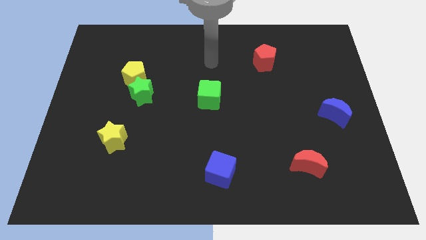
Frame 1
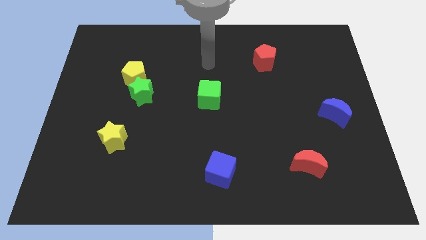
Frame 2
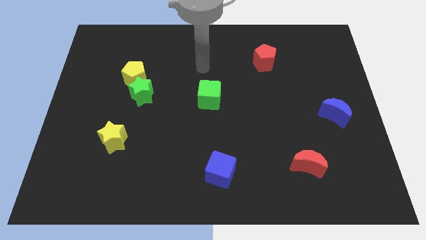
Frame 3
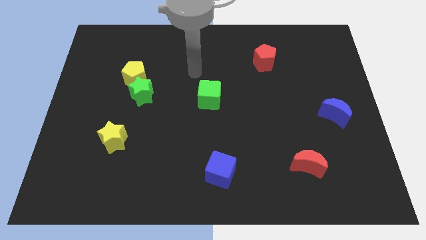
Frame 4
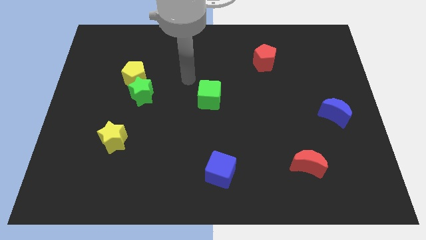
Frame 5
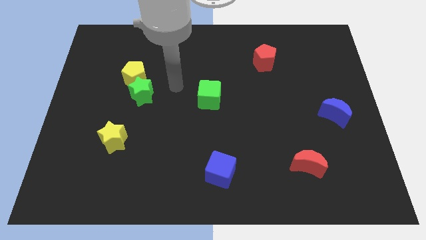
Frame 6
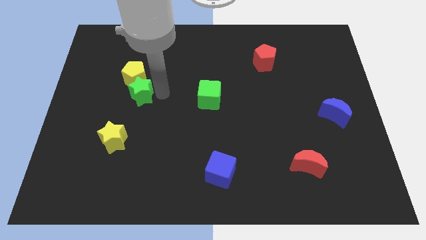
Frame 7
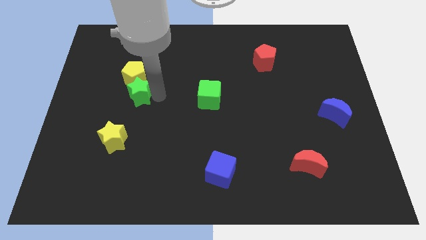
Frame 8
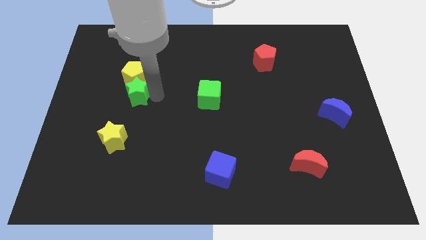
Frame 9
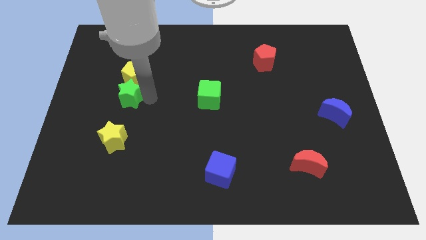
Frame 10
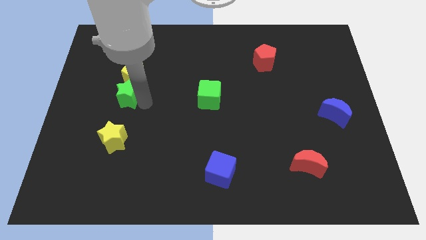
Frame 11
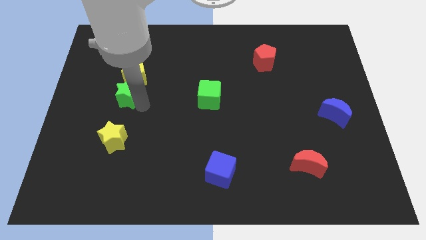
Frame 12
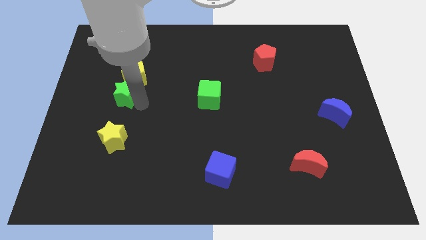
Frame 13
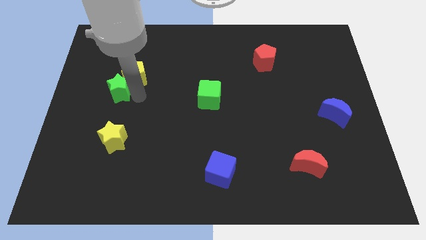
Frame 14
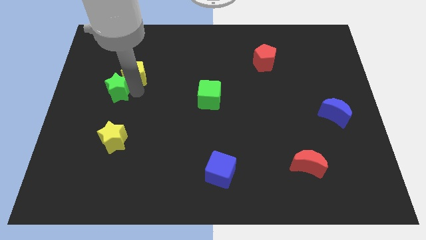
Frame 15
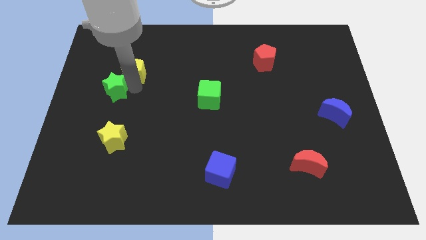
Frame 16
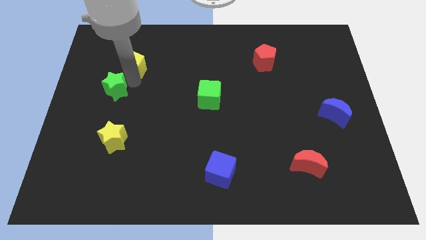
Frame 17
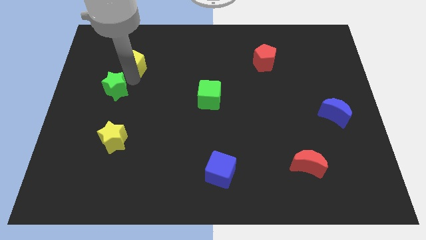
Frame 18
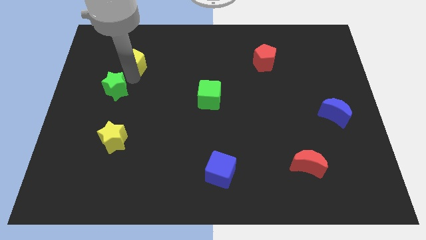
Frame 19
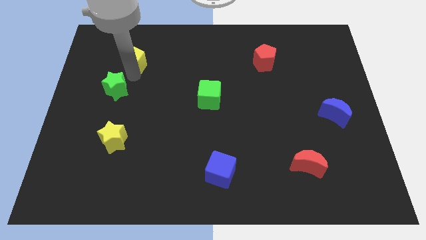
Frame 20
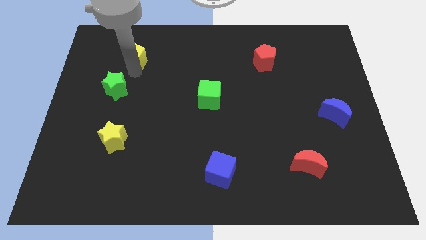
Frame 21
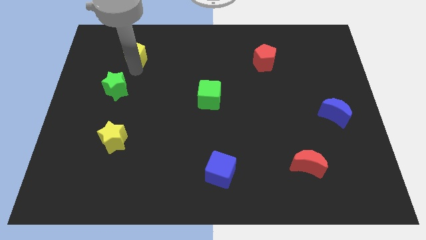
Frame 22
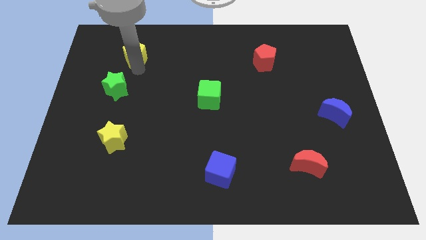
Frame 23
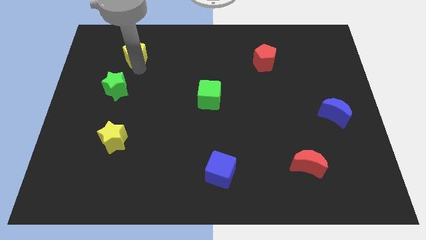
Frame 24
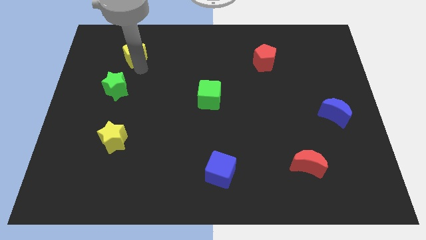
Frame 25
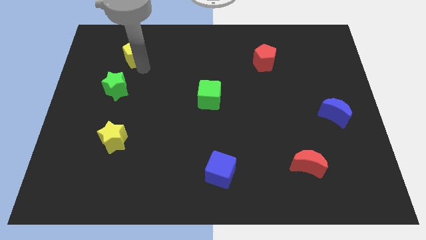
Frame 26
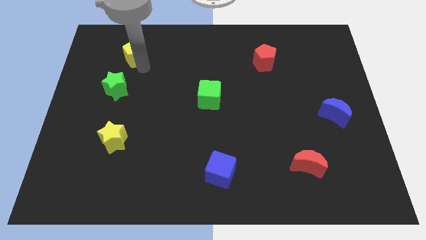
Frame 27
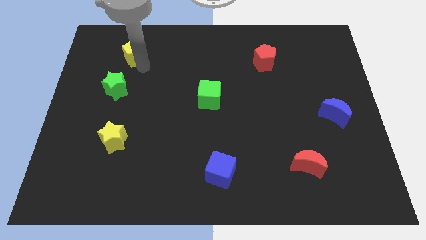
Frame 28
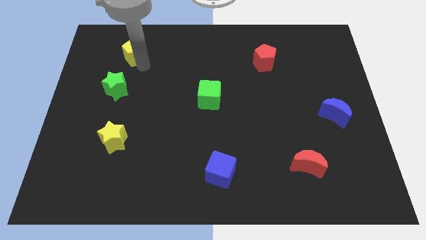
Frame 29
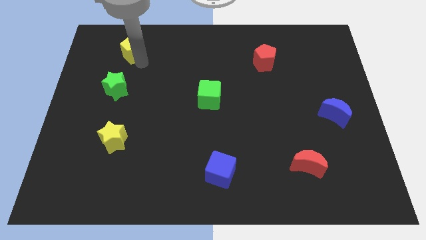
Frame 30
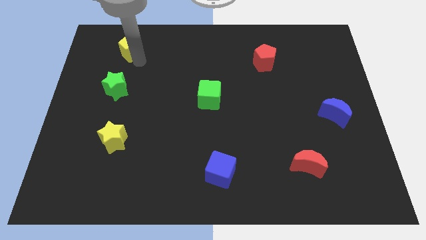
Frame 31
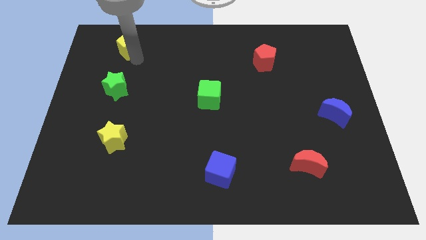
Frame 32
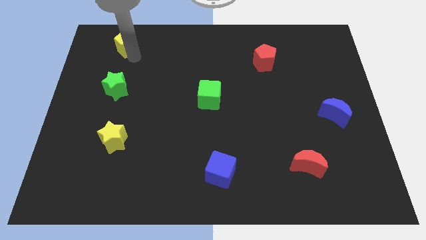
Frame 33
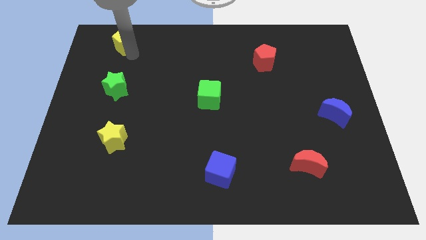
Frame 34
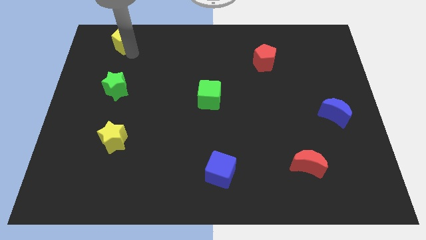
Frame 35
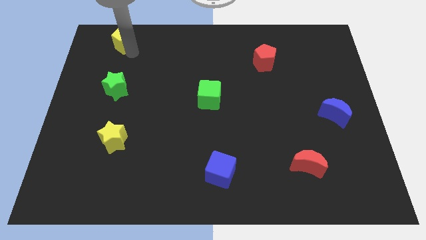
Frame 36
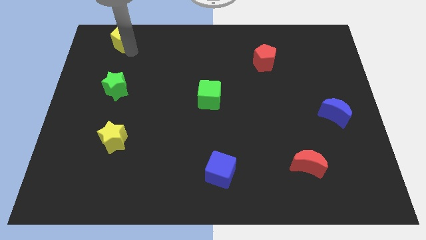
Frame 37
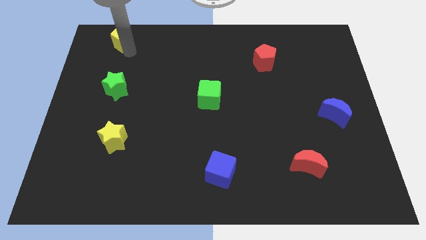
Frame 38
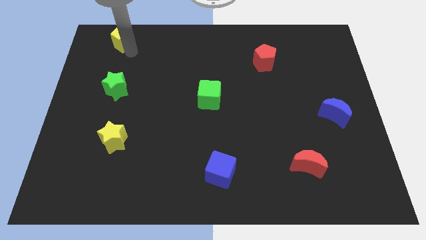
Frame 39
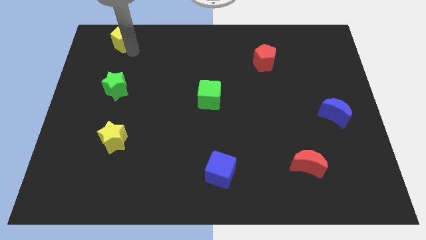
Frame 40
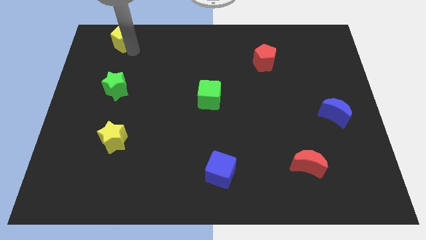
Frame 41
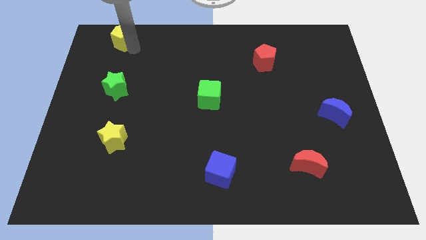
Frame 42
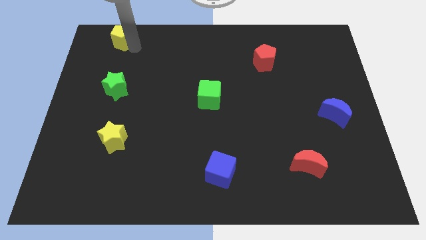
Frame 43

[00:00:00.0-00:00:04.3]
push the yellow pentagon towards the top left of the board

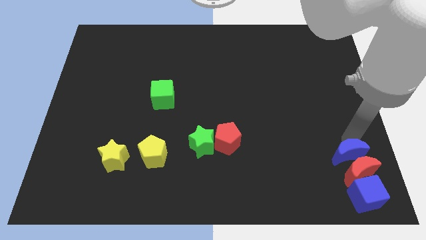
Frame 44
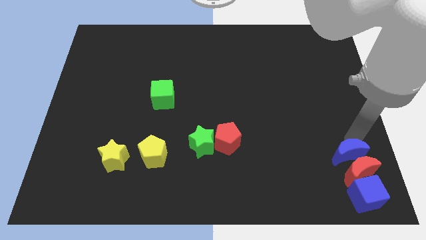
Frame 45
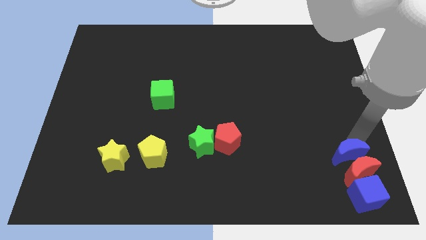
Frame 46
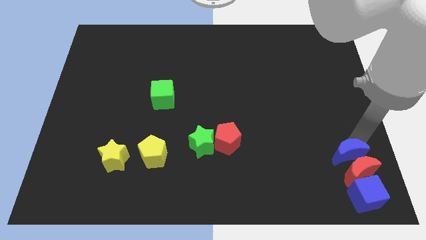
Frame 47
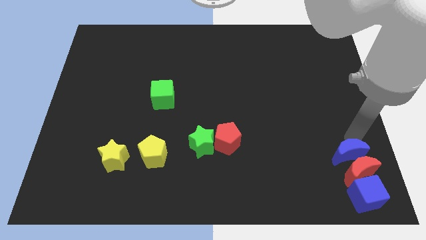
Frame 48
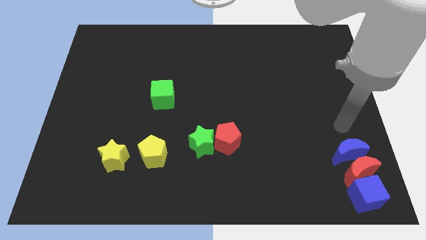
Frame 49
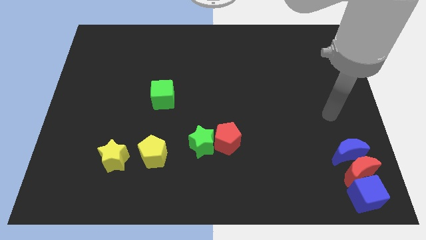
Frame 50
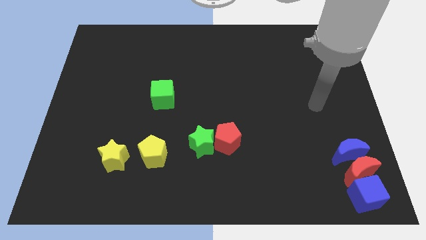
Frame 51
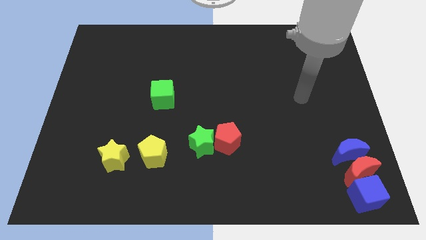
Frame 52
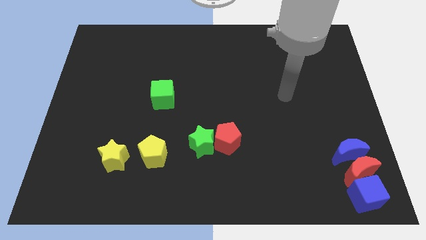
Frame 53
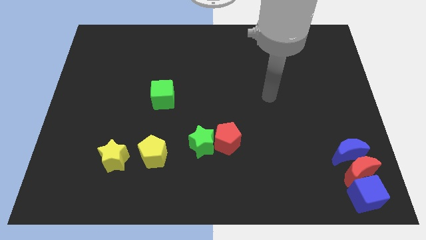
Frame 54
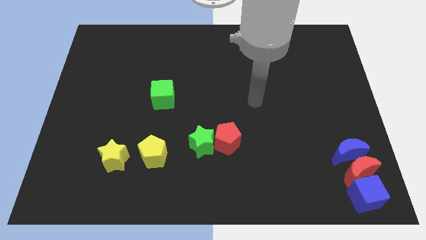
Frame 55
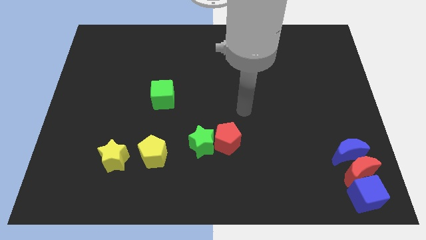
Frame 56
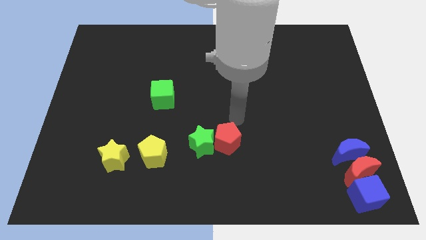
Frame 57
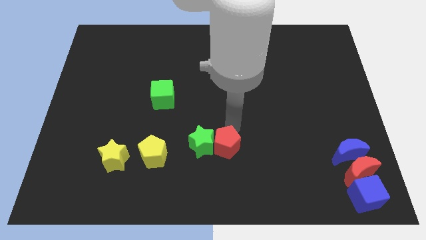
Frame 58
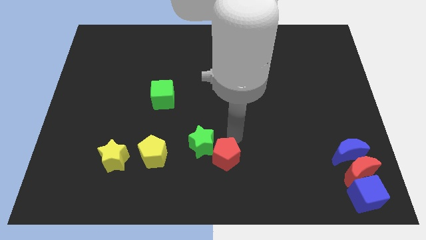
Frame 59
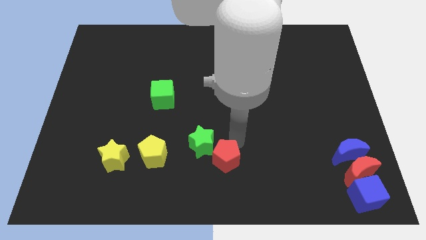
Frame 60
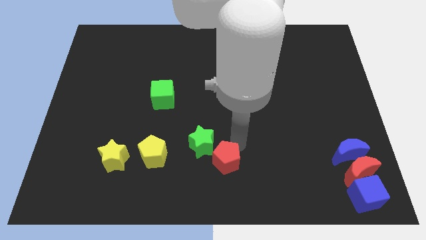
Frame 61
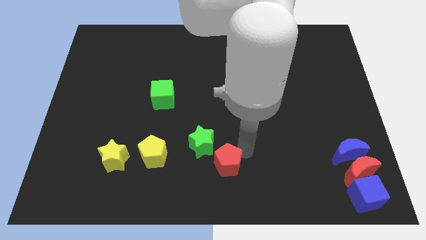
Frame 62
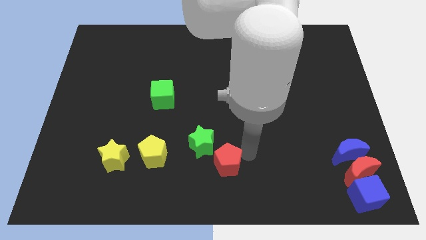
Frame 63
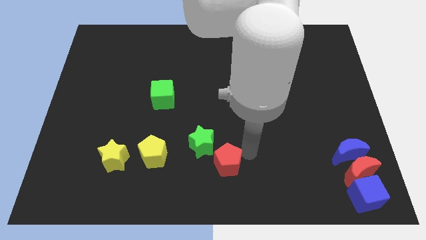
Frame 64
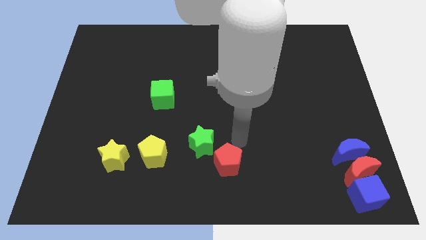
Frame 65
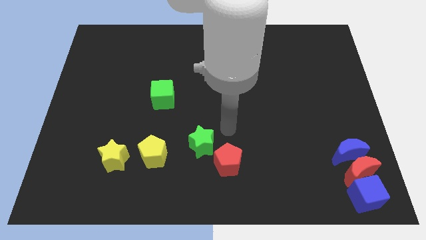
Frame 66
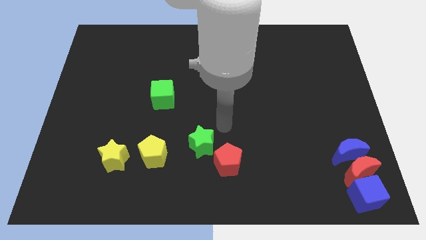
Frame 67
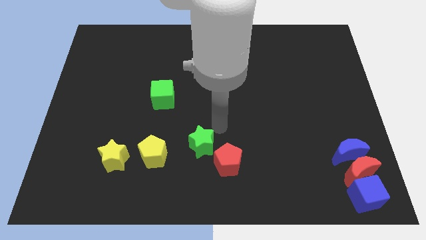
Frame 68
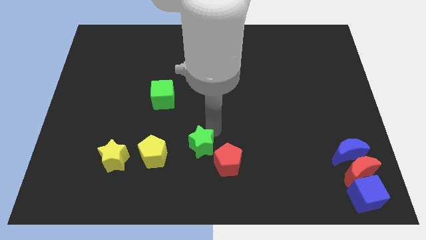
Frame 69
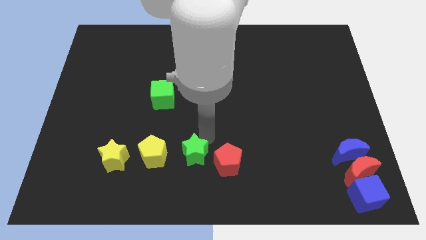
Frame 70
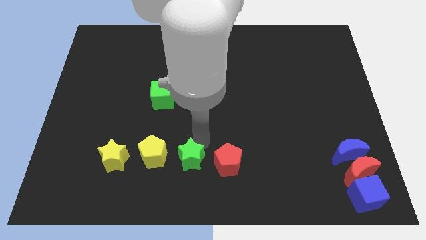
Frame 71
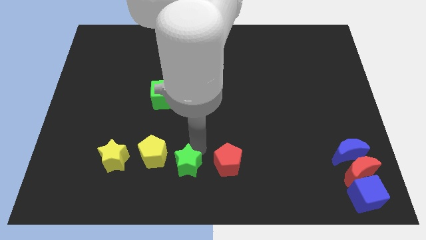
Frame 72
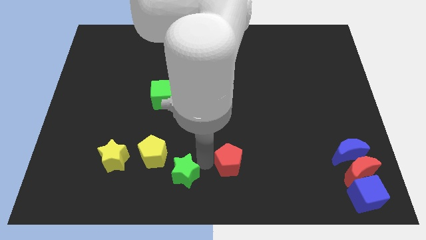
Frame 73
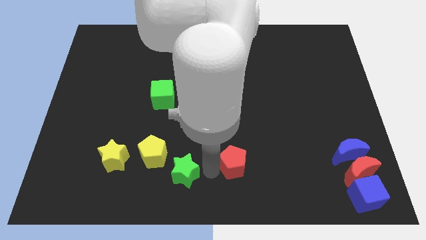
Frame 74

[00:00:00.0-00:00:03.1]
separate red pentagon and the green star

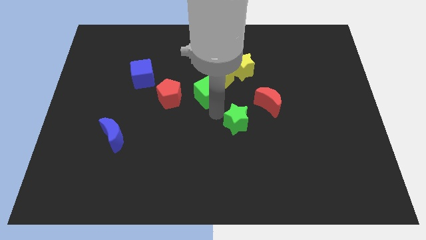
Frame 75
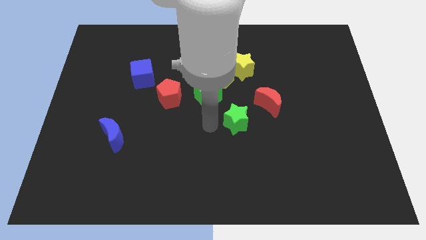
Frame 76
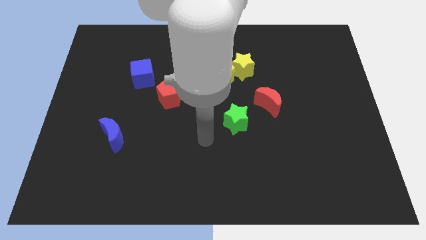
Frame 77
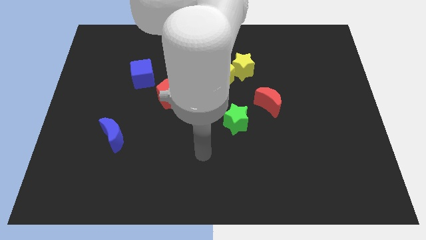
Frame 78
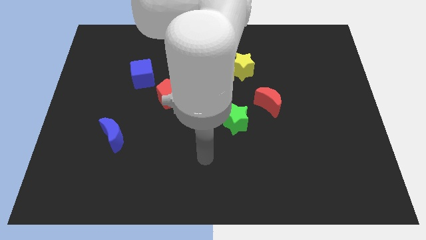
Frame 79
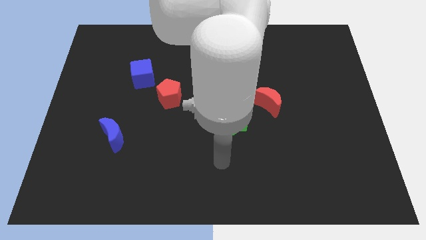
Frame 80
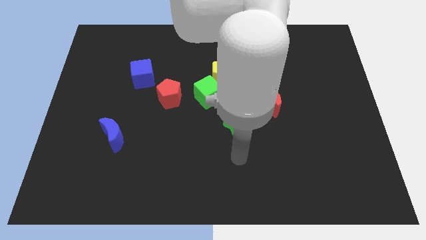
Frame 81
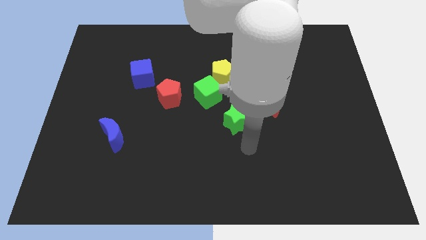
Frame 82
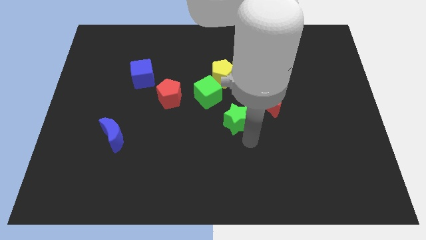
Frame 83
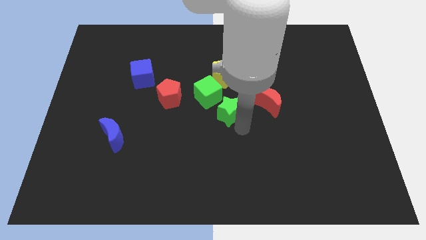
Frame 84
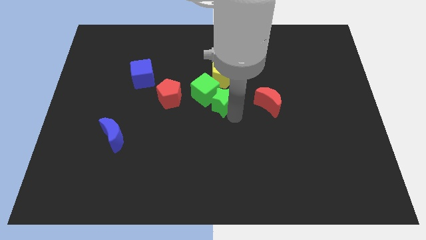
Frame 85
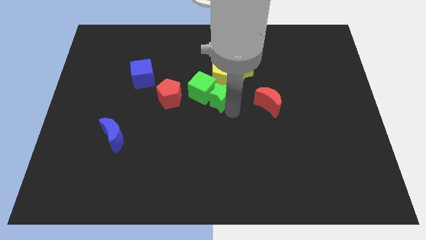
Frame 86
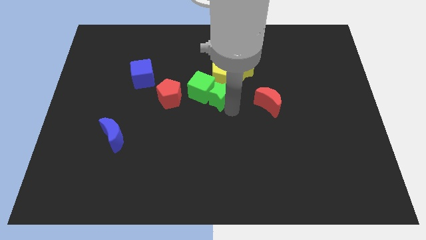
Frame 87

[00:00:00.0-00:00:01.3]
move the green star into the right side of the green cube

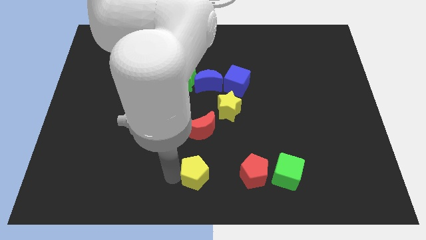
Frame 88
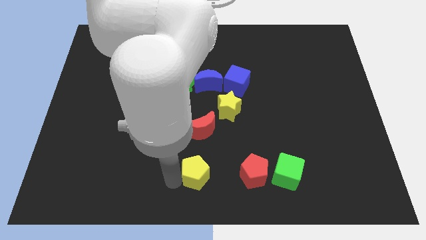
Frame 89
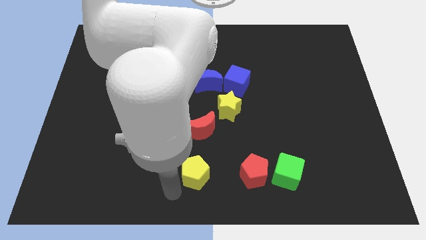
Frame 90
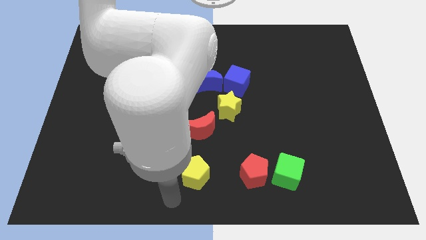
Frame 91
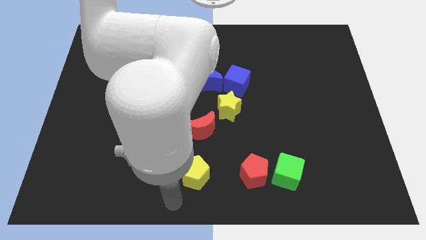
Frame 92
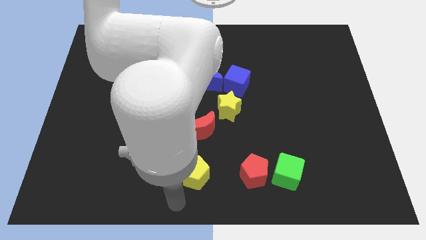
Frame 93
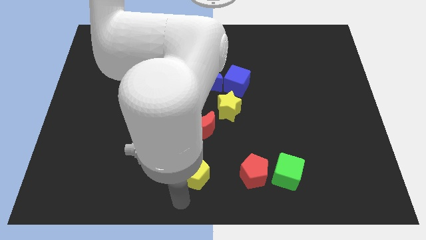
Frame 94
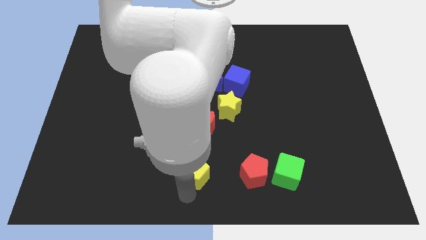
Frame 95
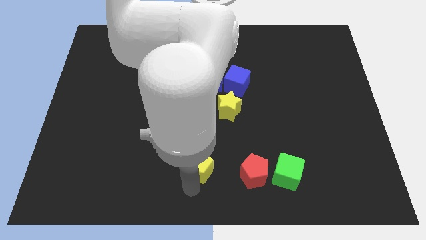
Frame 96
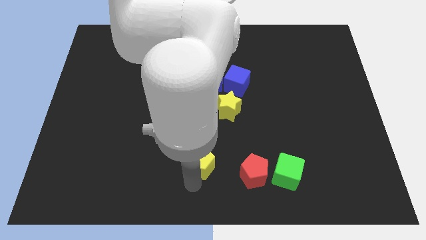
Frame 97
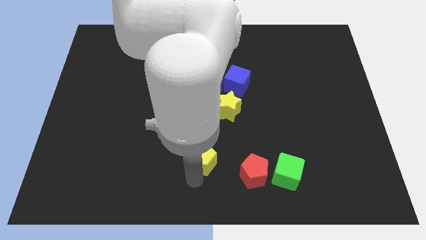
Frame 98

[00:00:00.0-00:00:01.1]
push yellow pentagon below red moon
